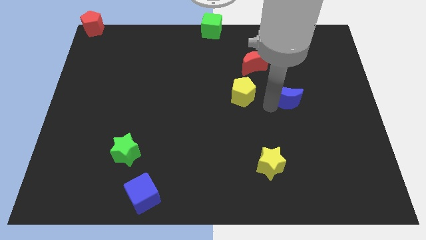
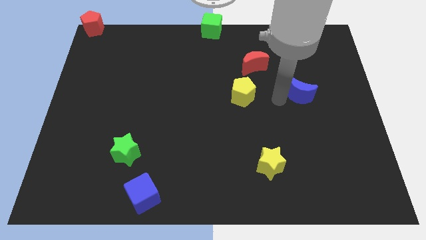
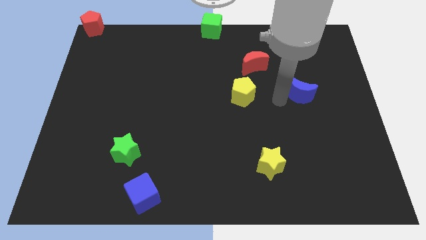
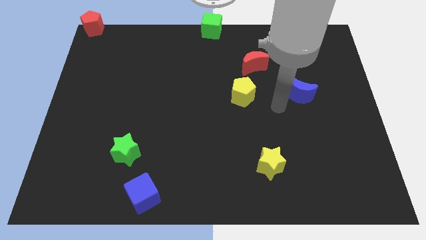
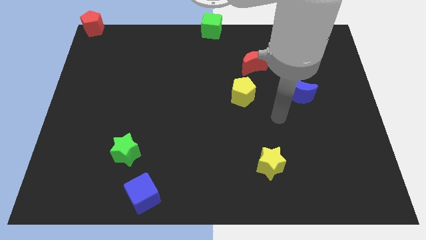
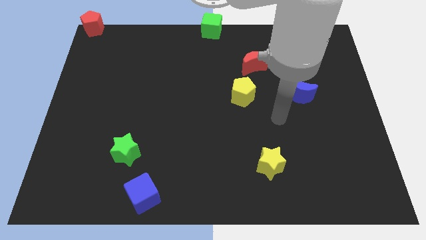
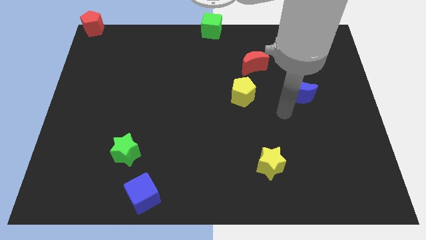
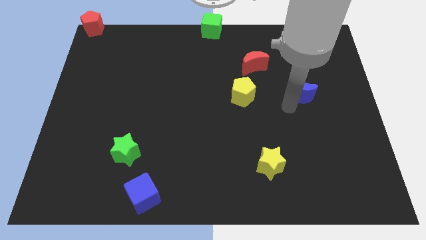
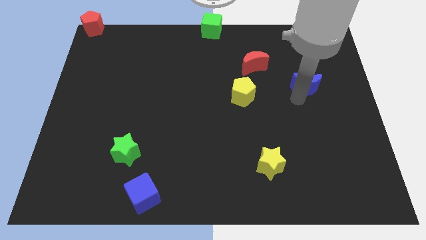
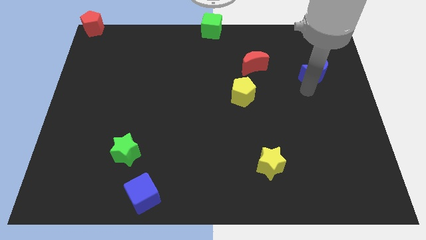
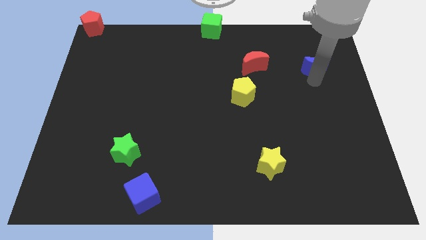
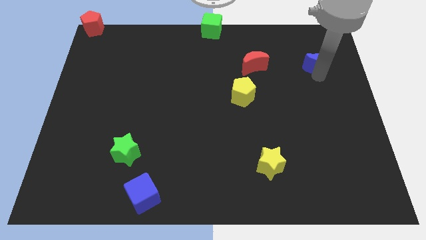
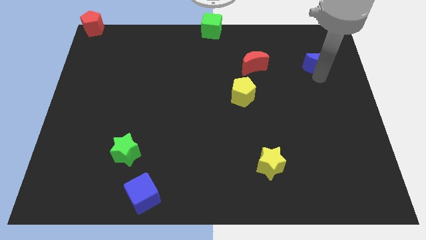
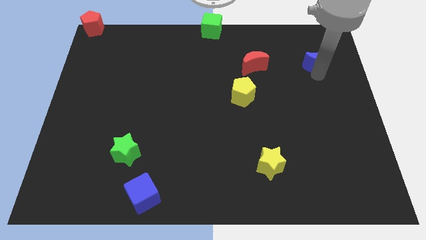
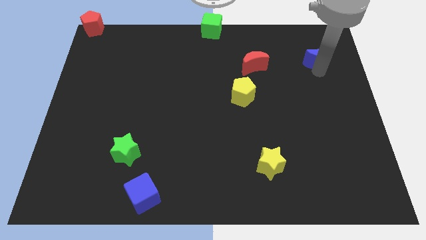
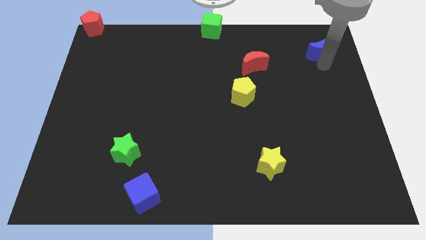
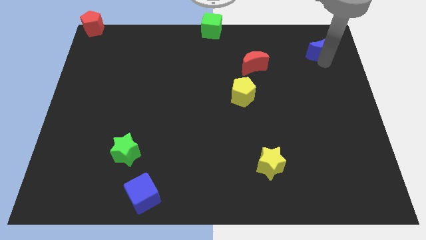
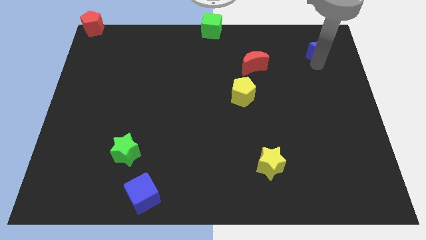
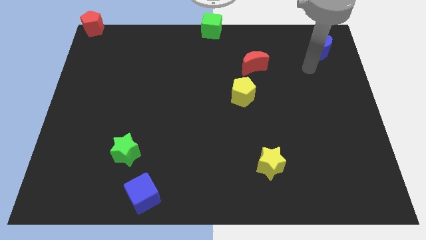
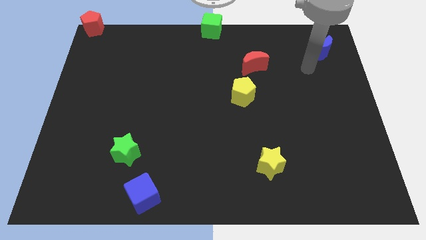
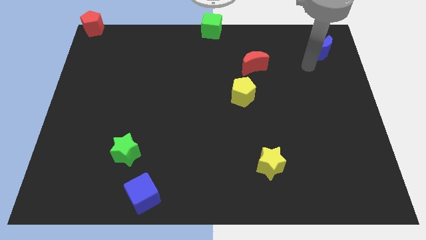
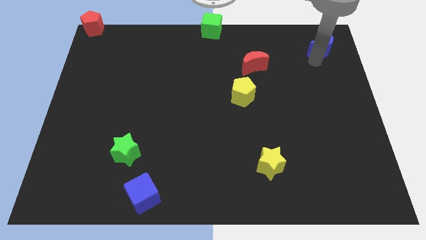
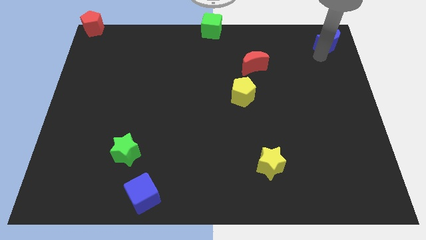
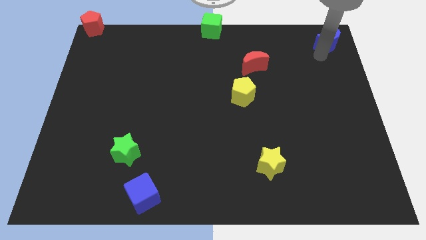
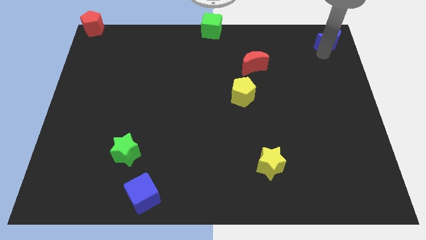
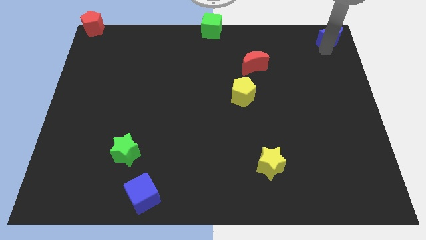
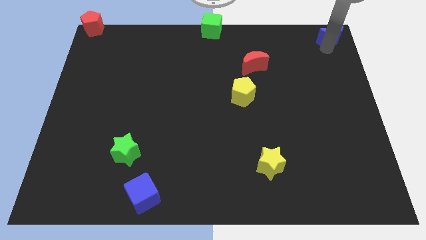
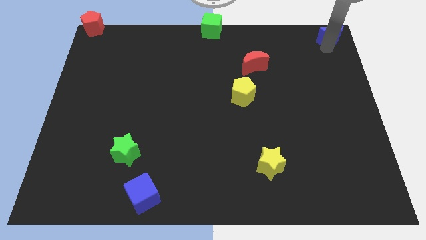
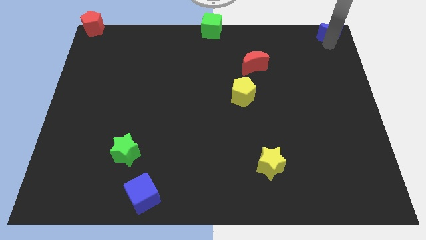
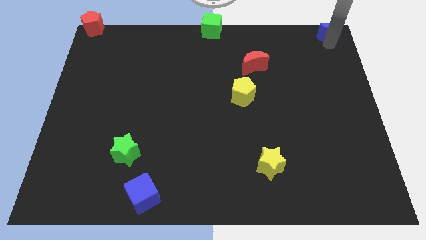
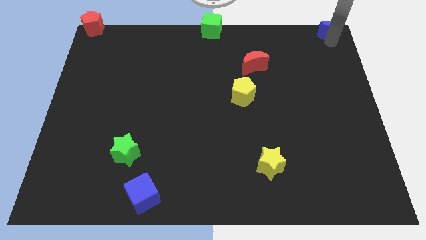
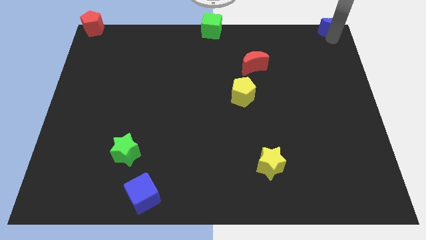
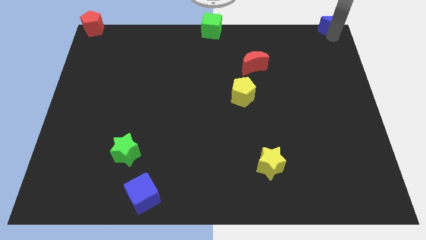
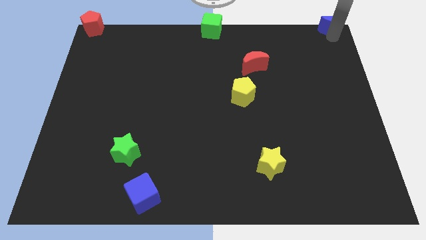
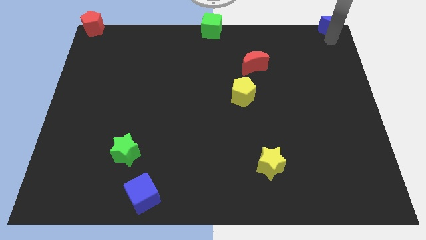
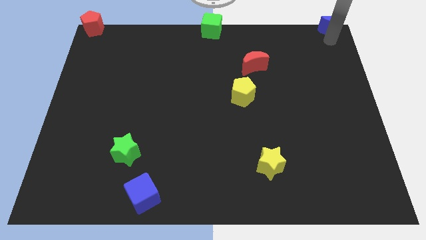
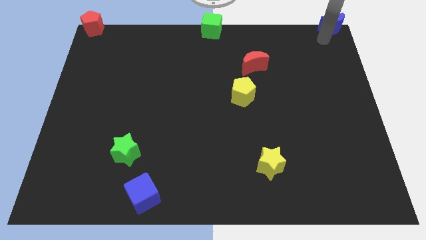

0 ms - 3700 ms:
move the blue crescent to the top right corner of the board

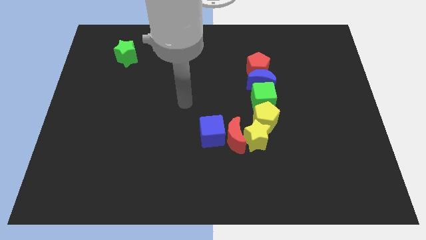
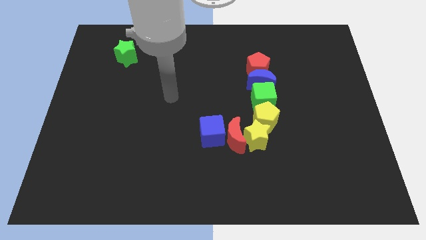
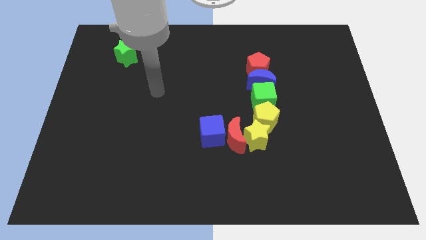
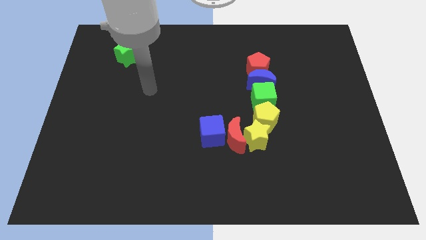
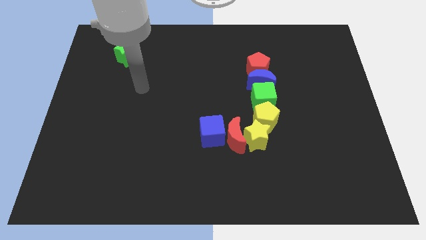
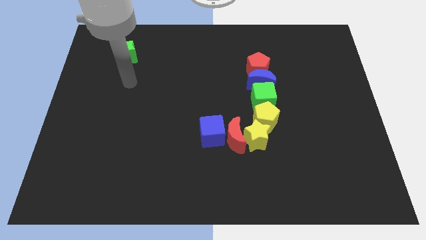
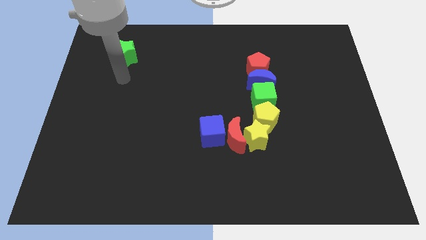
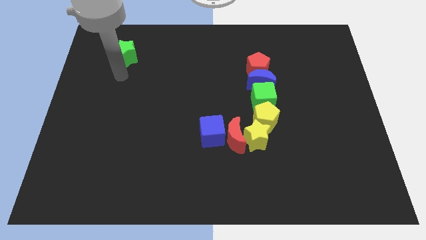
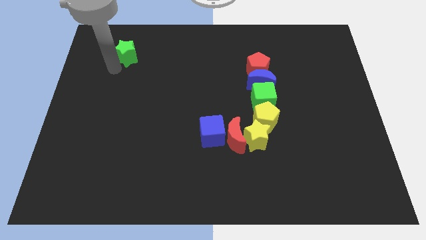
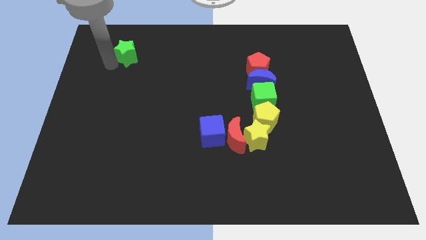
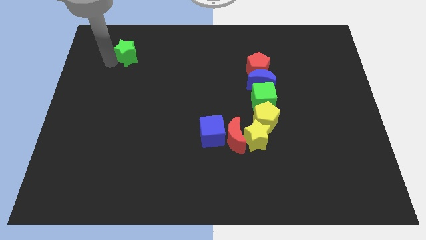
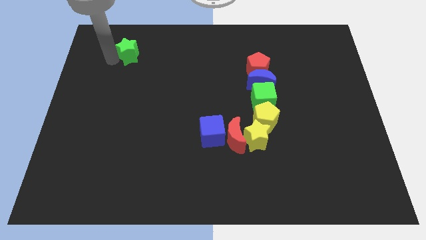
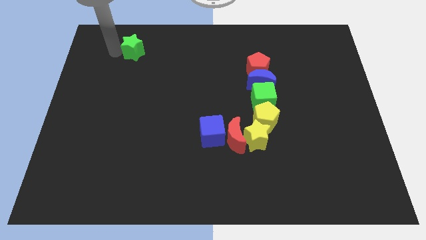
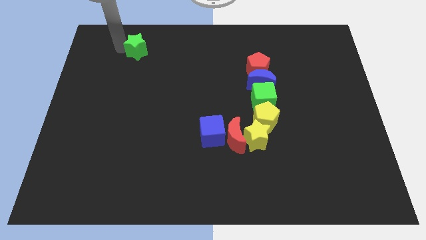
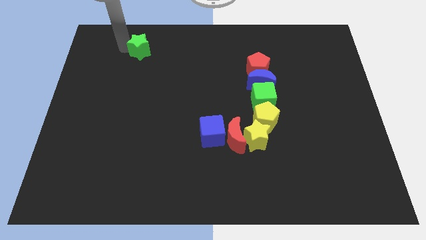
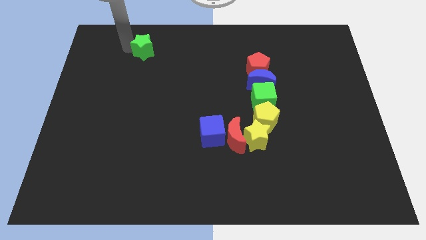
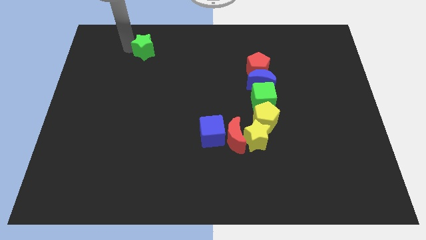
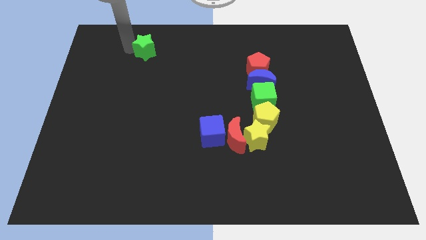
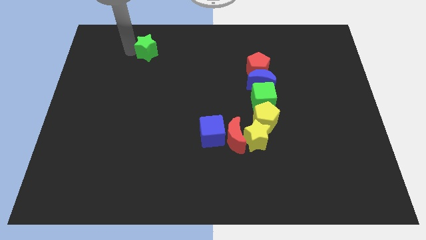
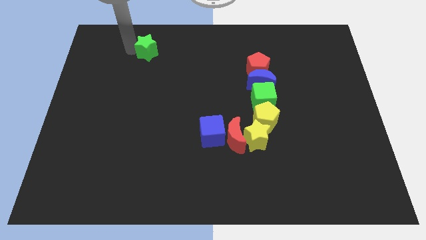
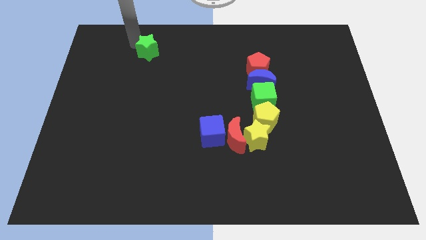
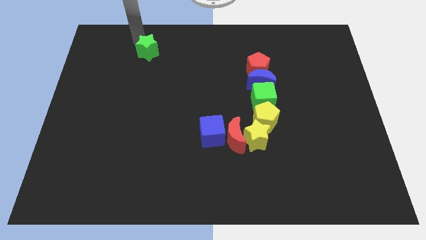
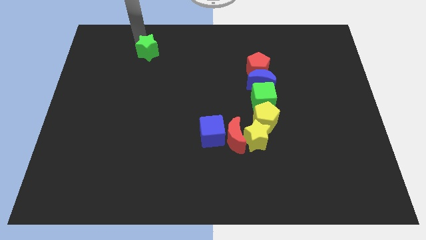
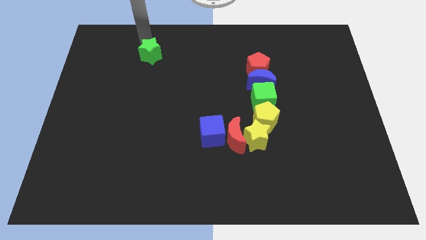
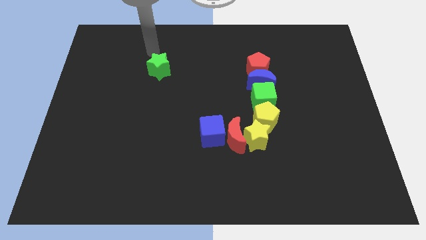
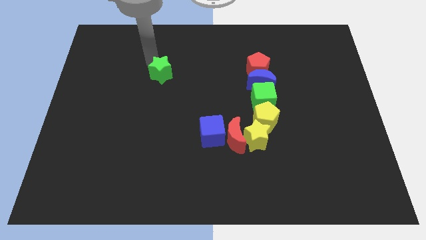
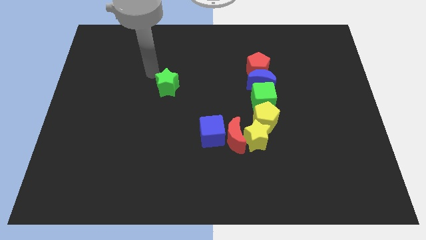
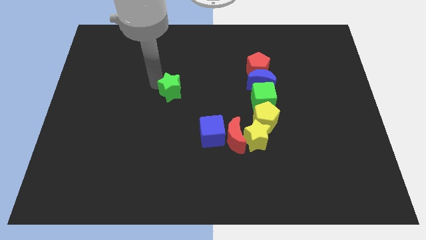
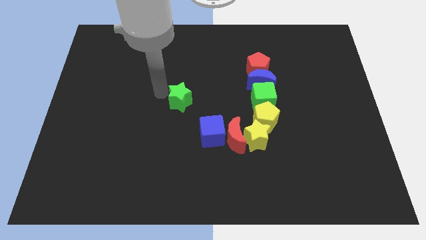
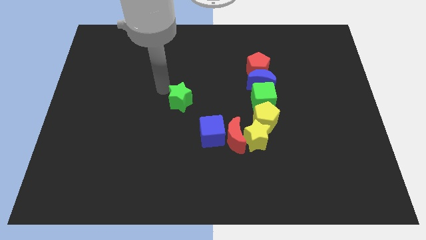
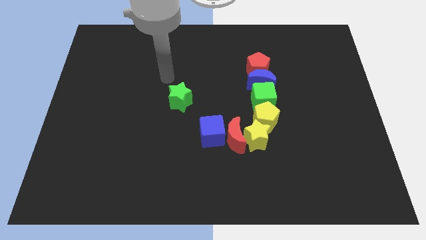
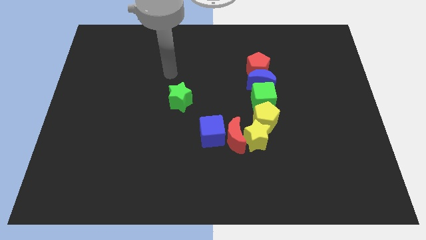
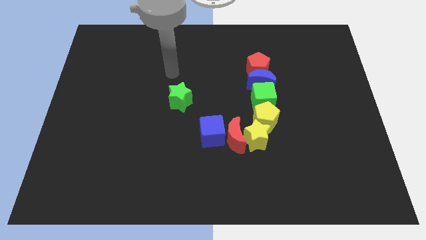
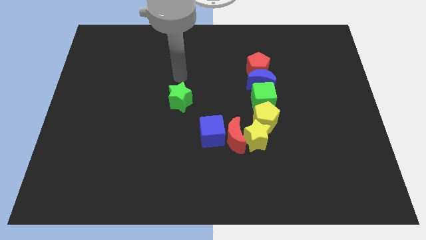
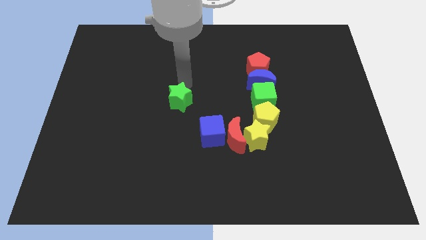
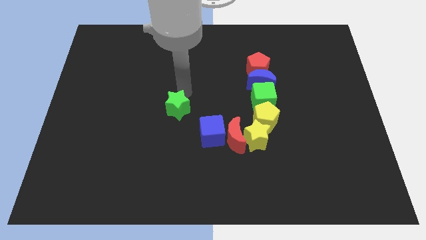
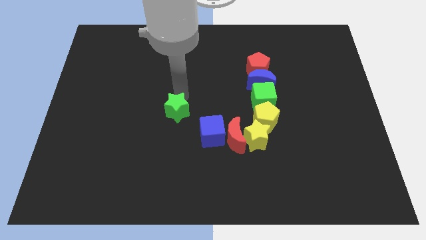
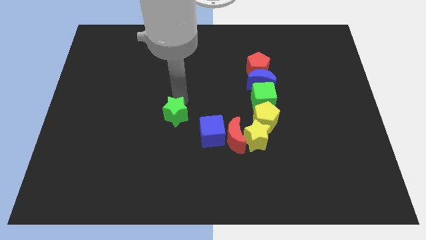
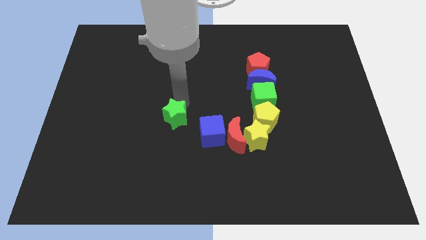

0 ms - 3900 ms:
move the green star towards the left side of the blue cube

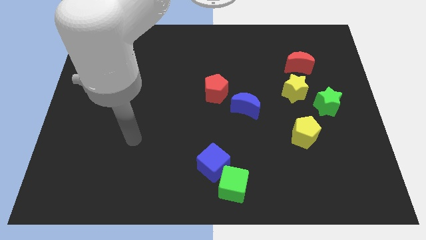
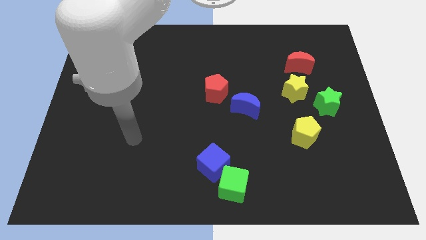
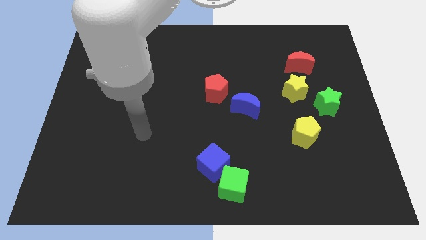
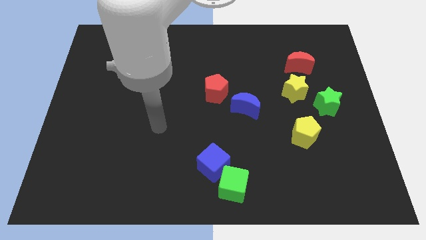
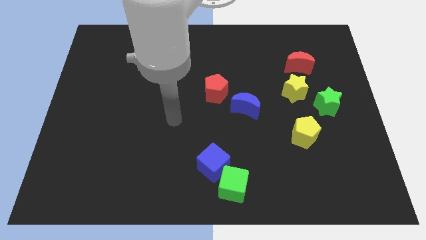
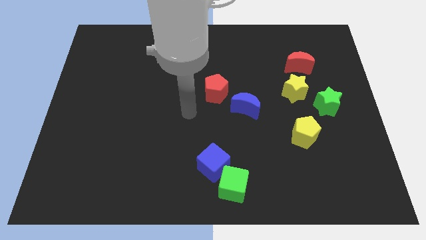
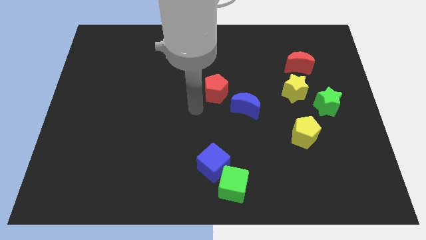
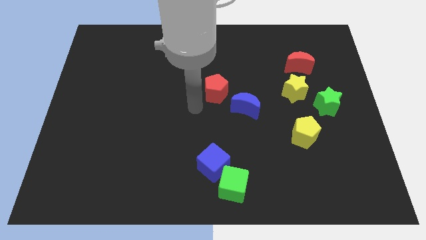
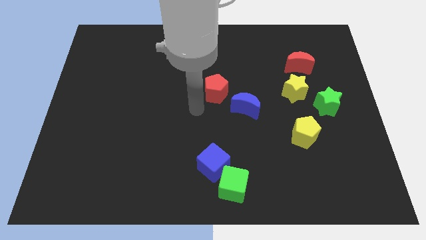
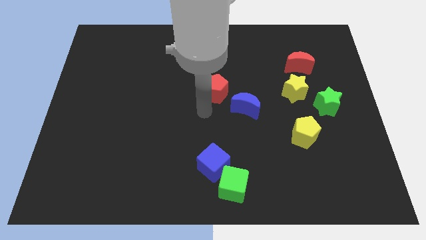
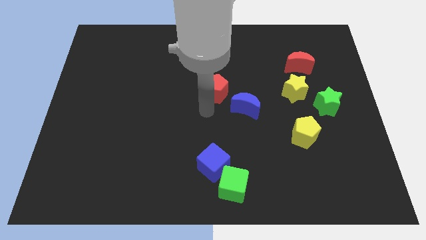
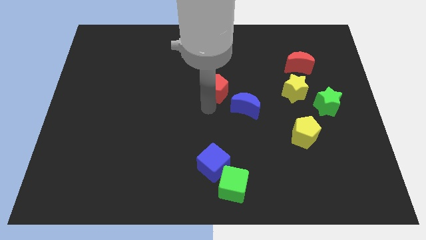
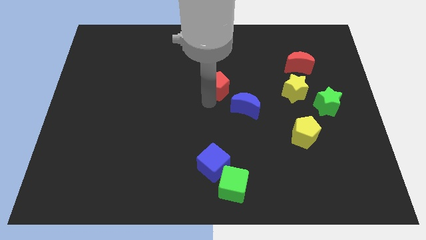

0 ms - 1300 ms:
point your arm below red pentagon

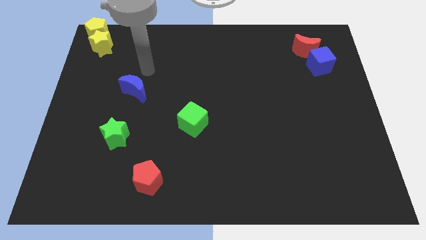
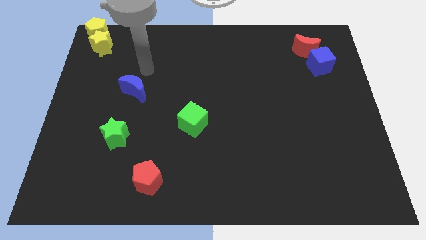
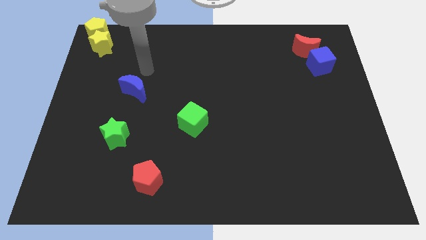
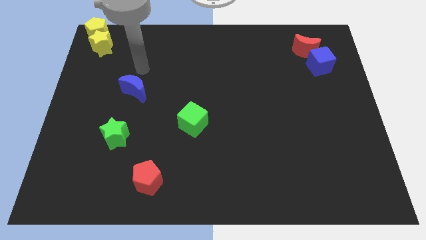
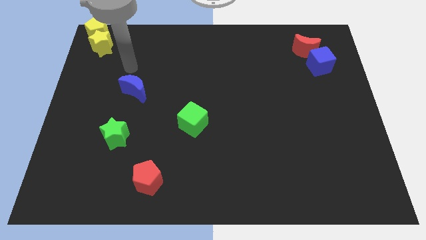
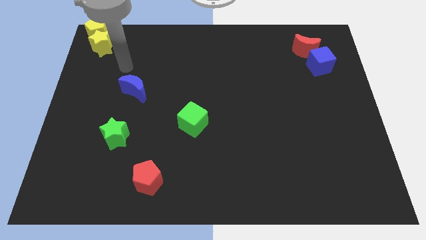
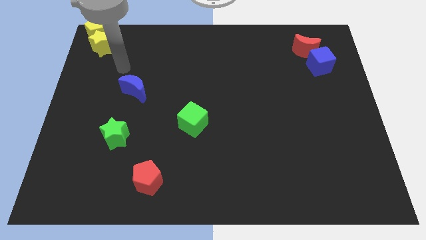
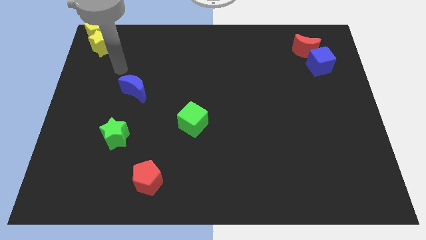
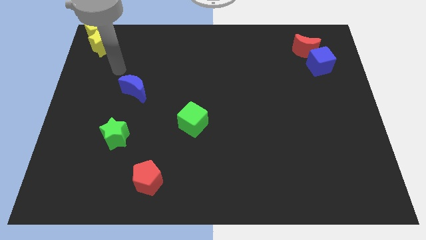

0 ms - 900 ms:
move arm away from blue moon
